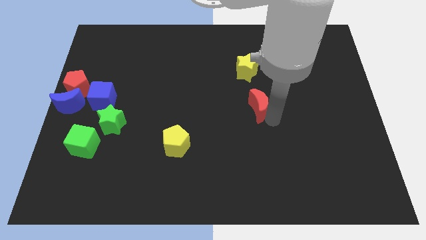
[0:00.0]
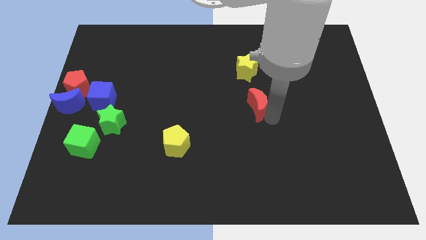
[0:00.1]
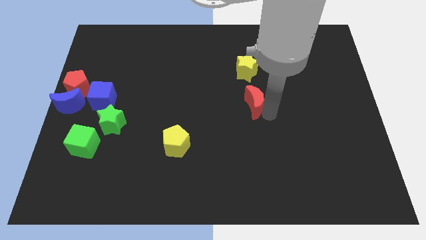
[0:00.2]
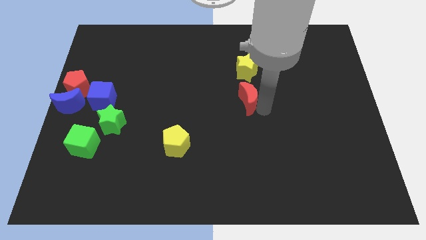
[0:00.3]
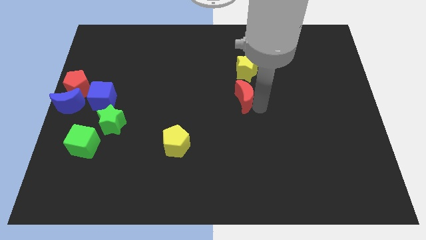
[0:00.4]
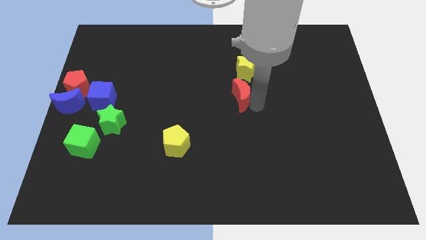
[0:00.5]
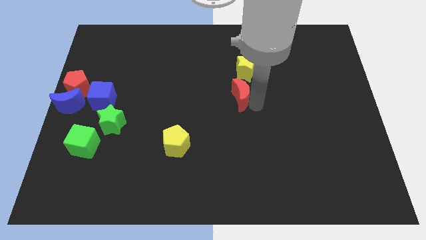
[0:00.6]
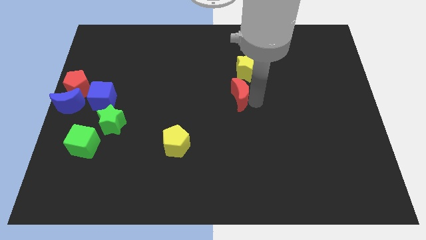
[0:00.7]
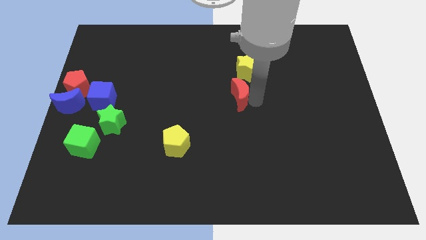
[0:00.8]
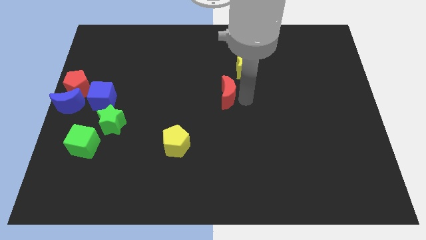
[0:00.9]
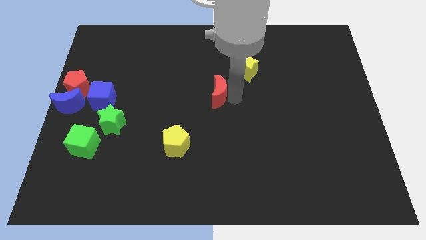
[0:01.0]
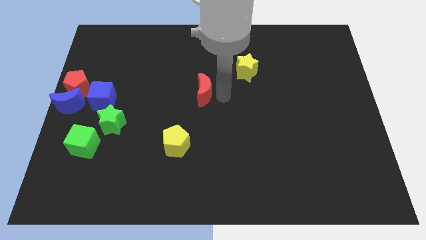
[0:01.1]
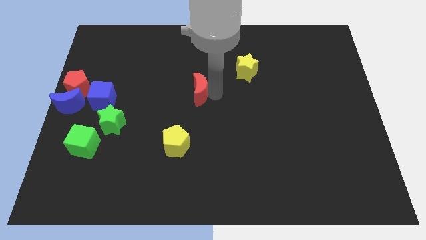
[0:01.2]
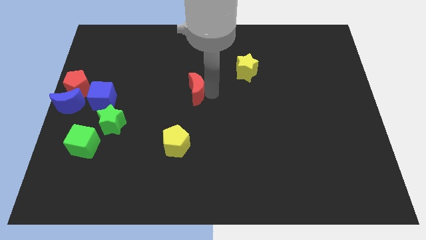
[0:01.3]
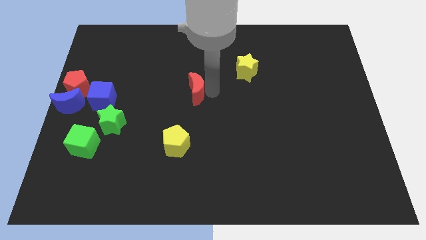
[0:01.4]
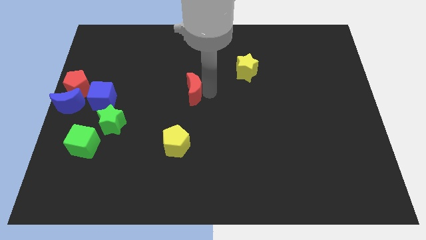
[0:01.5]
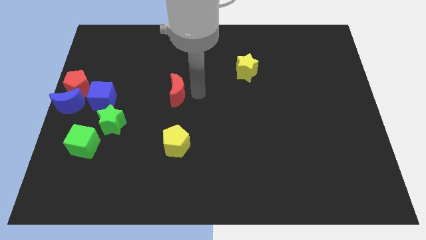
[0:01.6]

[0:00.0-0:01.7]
push the red crescent parallel to the yellow pentagon

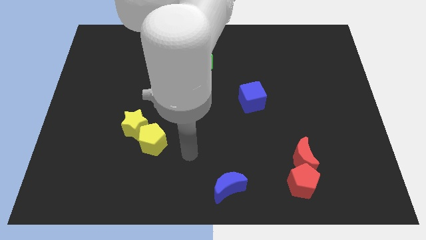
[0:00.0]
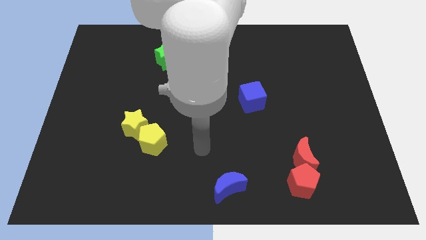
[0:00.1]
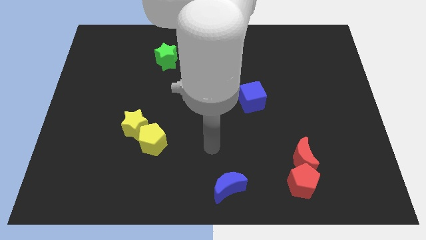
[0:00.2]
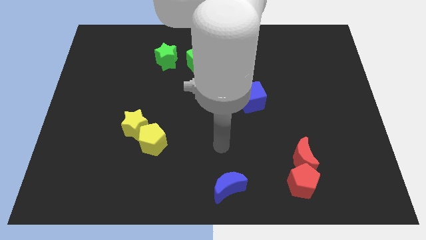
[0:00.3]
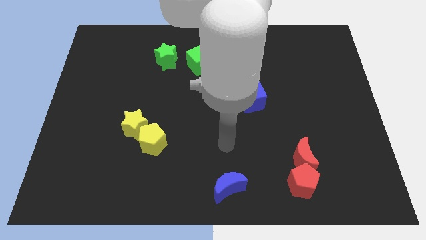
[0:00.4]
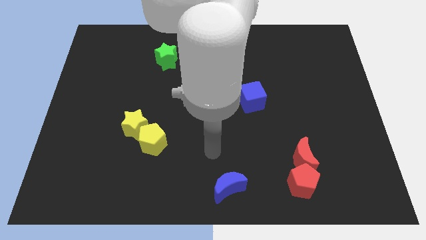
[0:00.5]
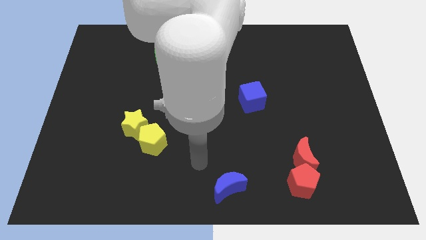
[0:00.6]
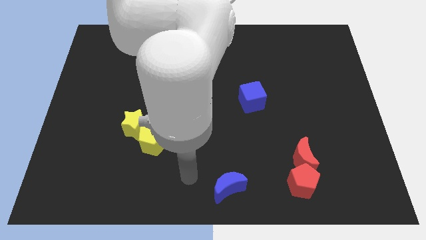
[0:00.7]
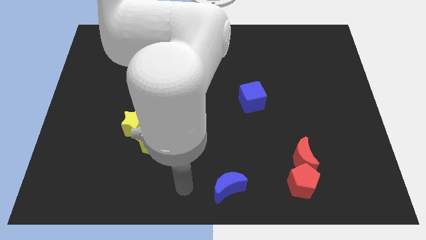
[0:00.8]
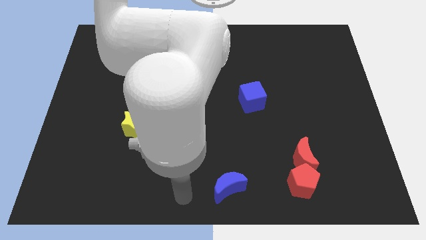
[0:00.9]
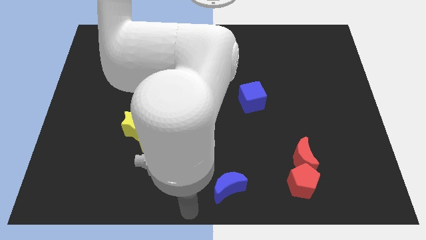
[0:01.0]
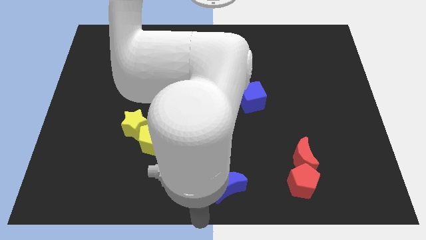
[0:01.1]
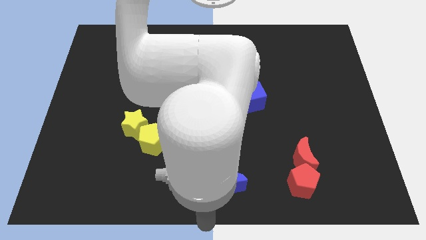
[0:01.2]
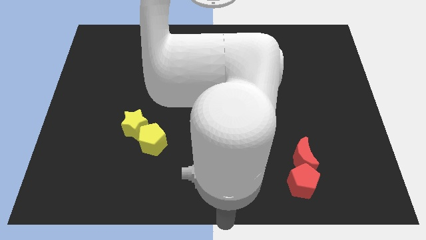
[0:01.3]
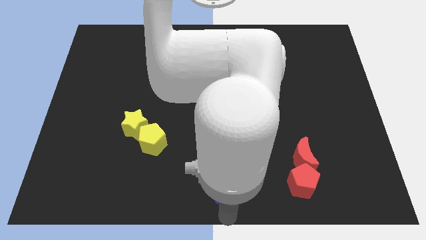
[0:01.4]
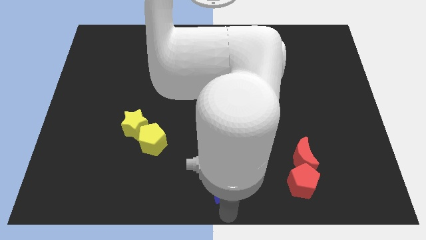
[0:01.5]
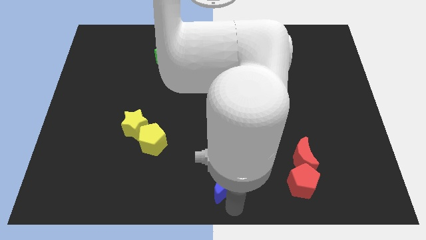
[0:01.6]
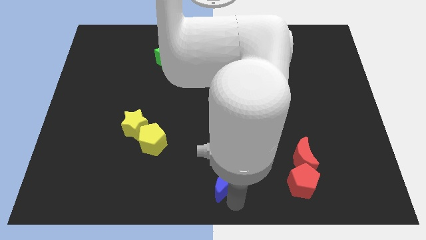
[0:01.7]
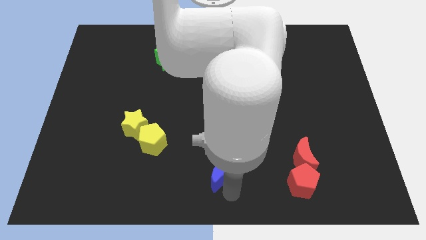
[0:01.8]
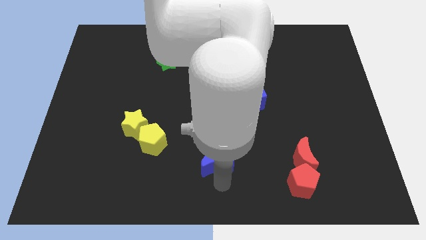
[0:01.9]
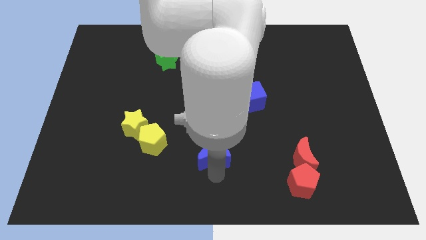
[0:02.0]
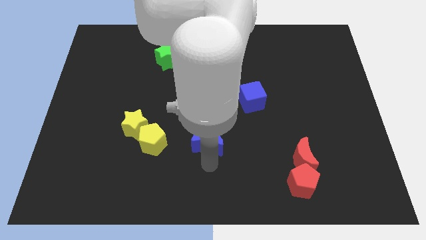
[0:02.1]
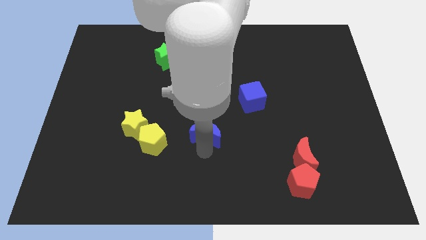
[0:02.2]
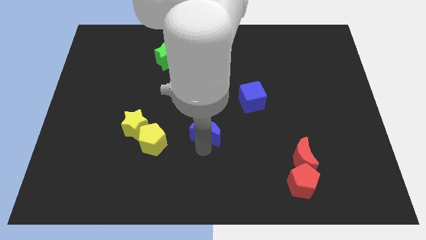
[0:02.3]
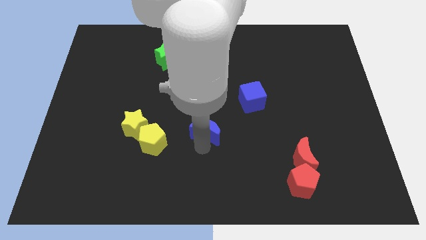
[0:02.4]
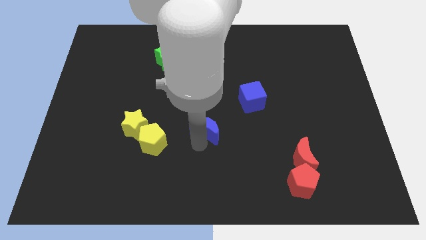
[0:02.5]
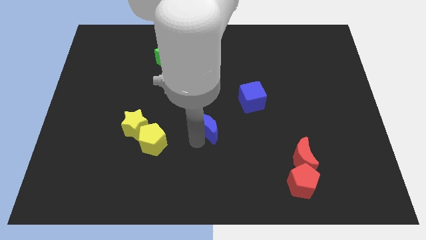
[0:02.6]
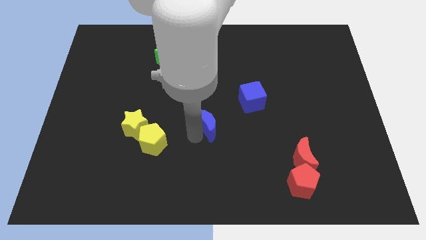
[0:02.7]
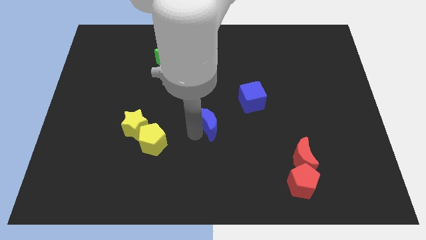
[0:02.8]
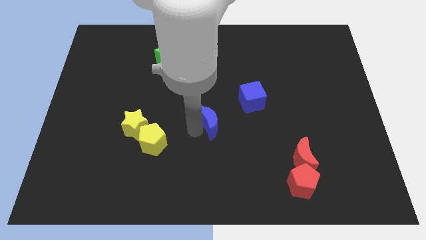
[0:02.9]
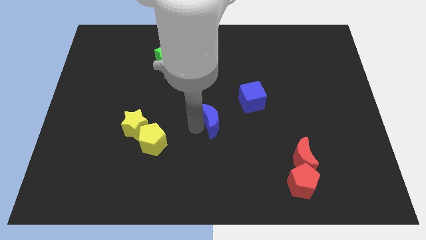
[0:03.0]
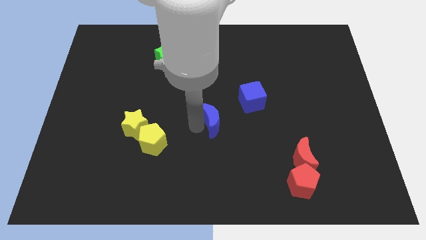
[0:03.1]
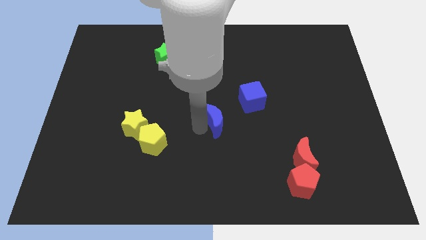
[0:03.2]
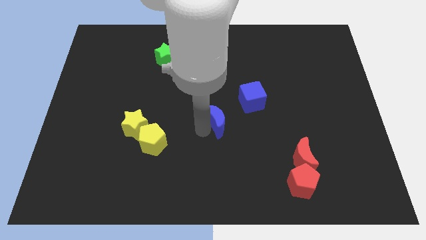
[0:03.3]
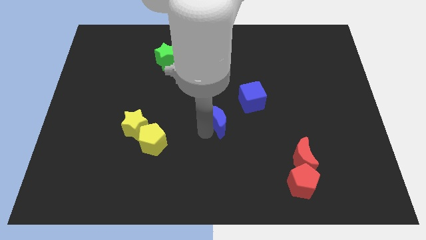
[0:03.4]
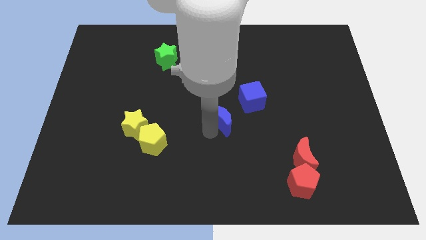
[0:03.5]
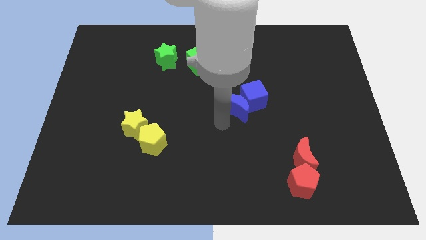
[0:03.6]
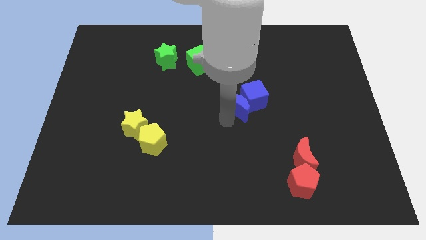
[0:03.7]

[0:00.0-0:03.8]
push the blue crescent into the blue cube

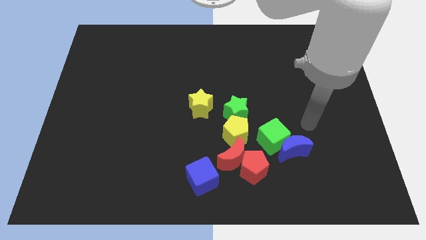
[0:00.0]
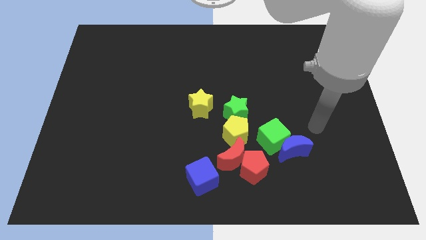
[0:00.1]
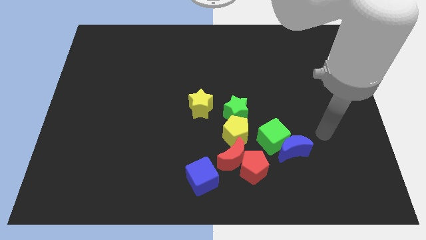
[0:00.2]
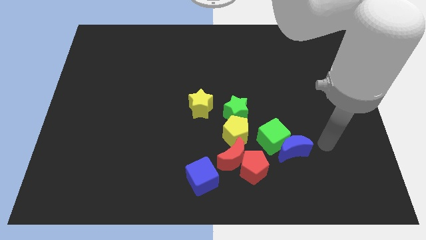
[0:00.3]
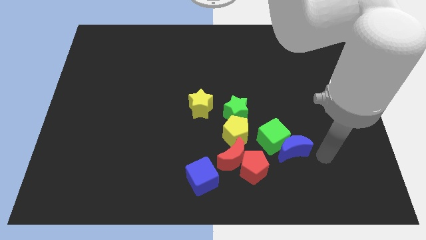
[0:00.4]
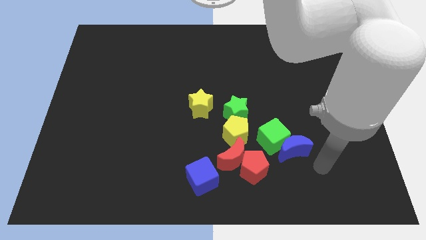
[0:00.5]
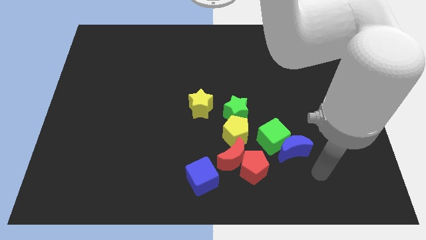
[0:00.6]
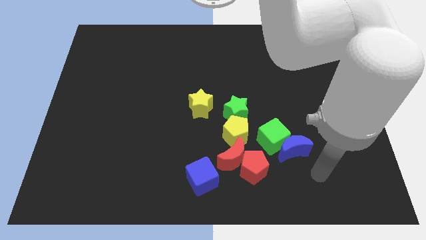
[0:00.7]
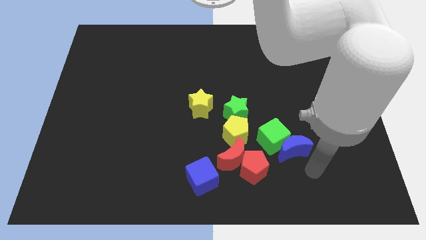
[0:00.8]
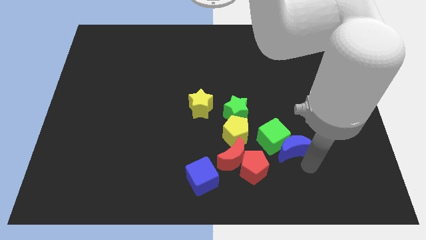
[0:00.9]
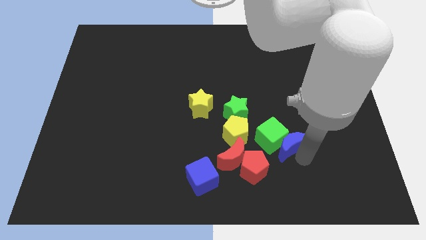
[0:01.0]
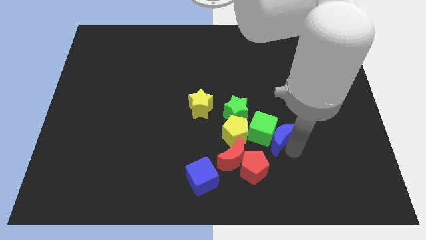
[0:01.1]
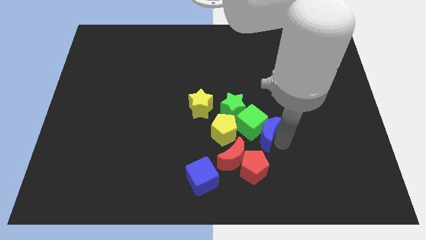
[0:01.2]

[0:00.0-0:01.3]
move the blue moon and green cube into the yellow pentagon

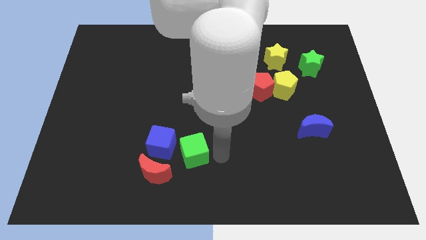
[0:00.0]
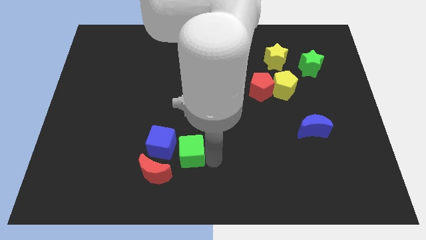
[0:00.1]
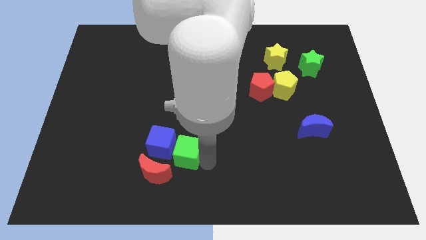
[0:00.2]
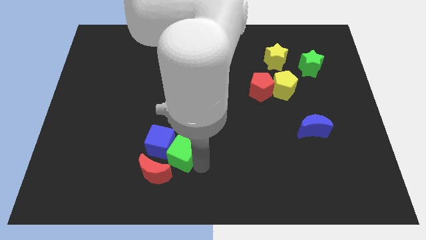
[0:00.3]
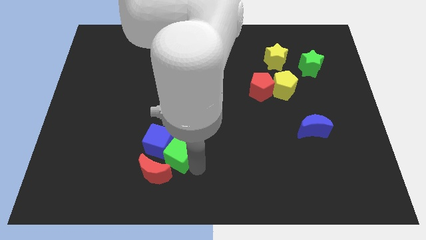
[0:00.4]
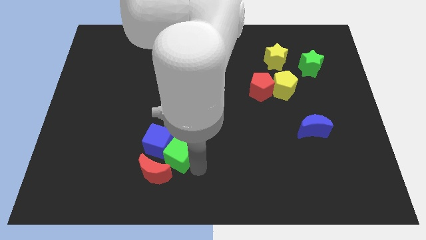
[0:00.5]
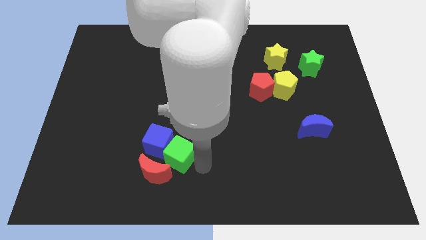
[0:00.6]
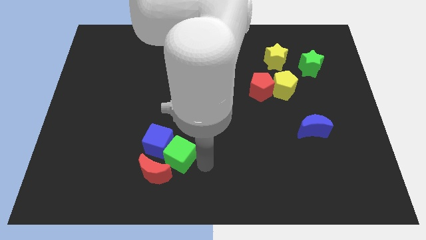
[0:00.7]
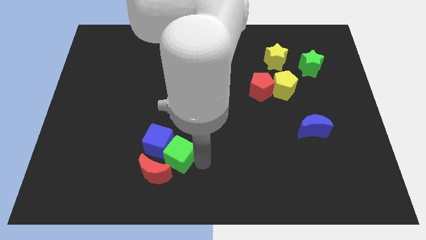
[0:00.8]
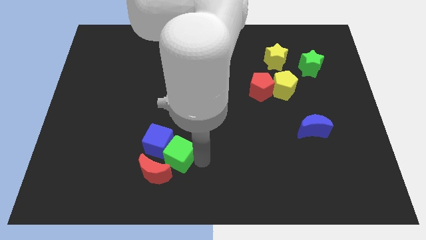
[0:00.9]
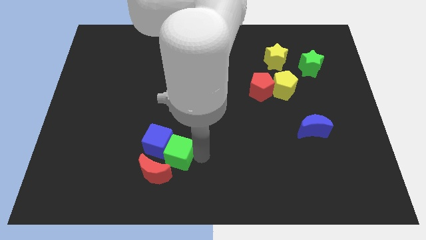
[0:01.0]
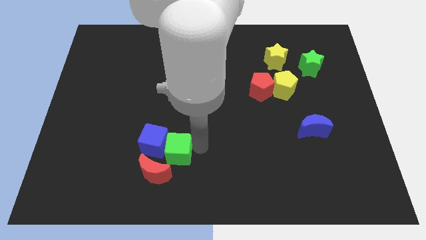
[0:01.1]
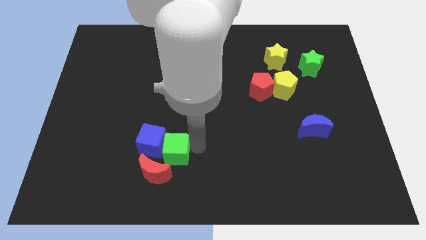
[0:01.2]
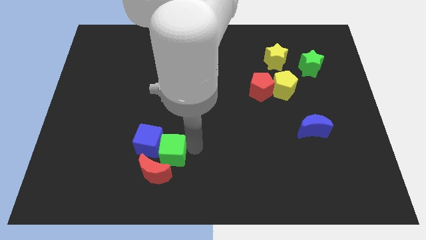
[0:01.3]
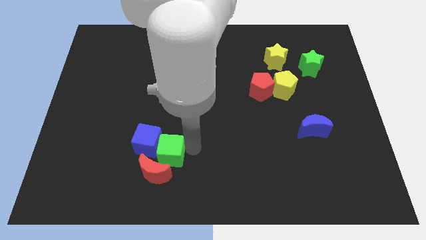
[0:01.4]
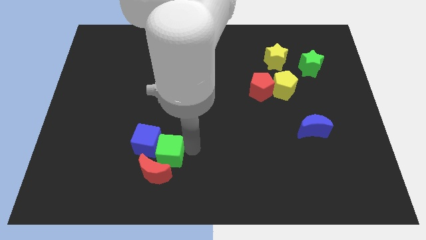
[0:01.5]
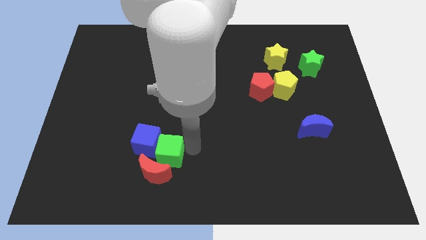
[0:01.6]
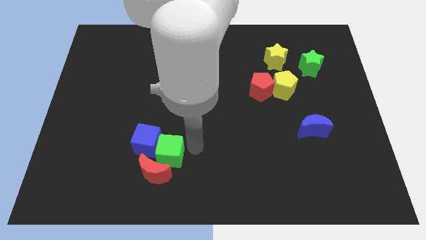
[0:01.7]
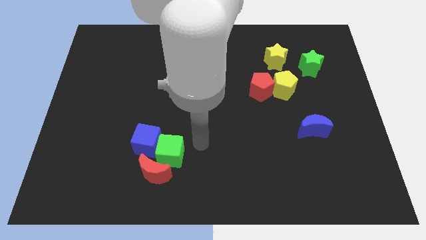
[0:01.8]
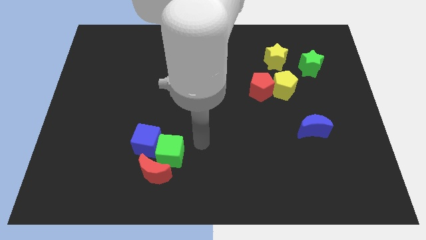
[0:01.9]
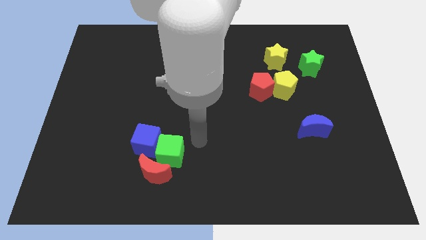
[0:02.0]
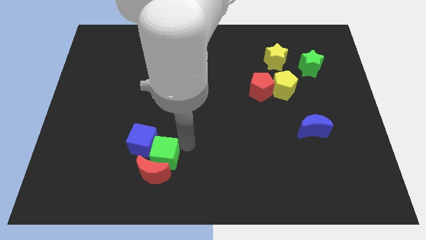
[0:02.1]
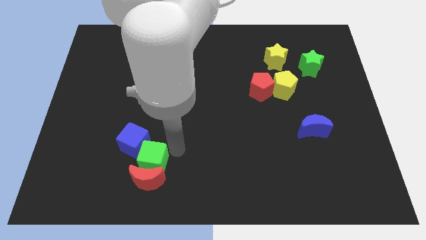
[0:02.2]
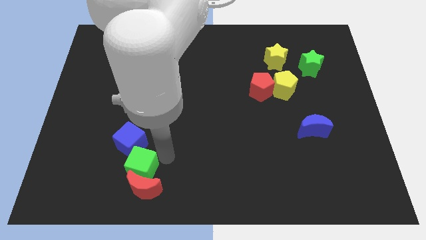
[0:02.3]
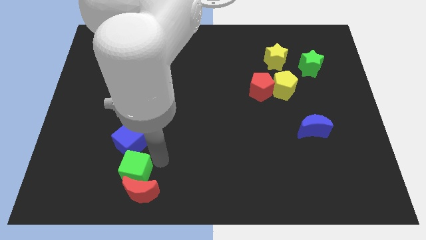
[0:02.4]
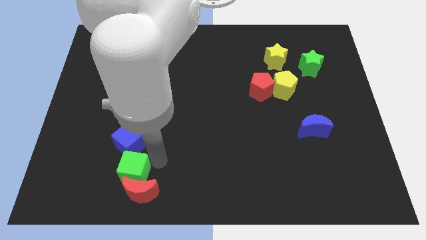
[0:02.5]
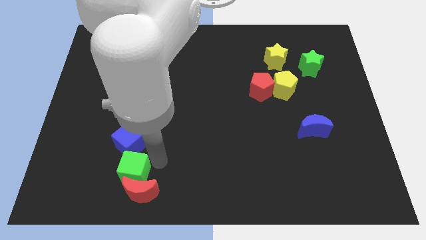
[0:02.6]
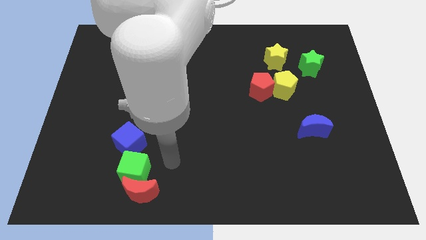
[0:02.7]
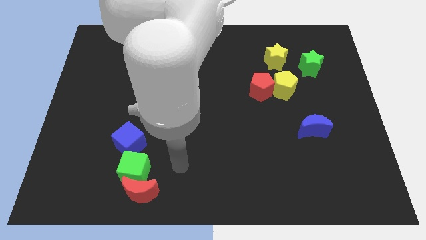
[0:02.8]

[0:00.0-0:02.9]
push green cube slightly towards down
